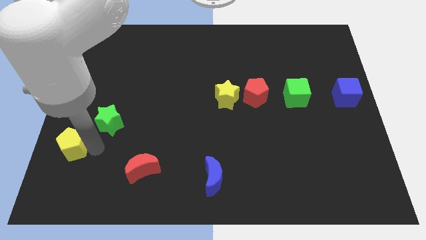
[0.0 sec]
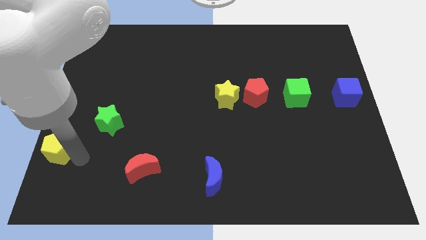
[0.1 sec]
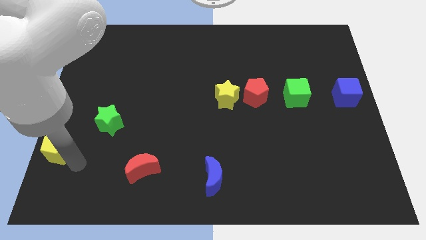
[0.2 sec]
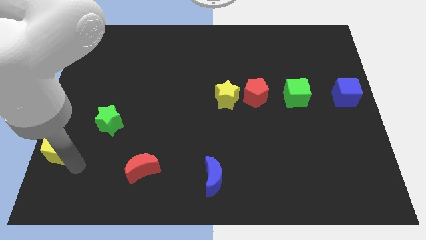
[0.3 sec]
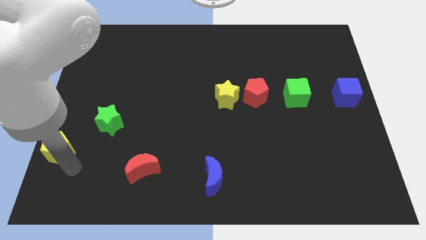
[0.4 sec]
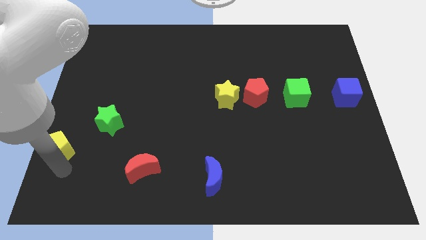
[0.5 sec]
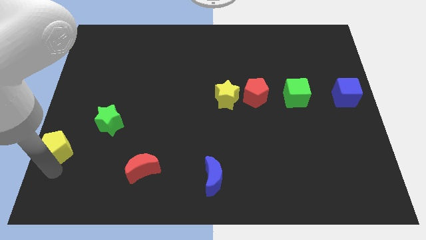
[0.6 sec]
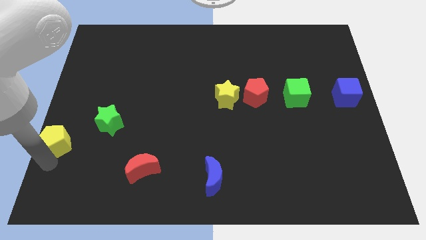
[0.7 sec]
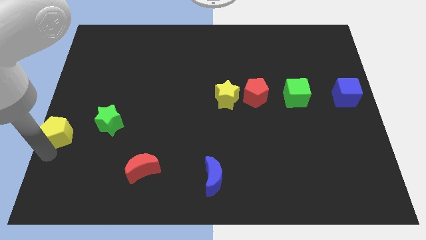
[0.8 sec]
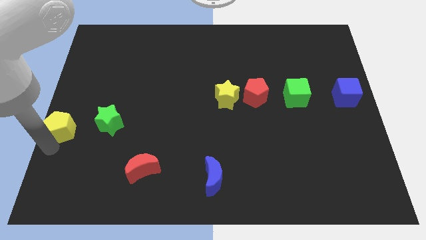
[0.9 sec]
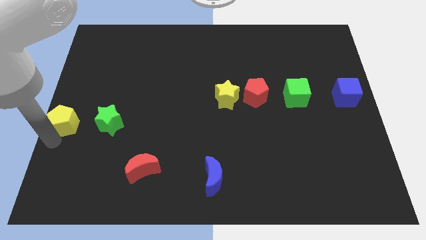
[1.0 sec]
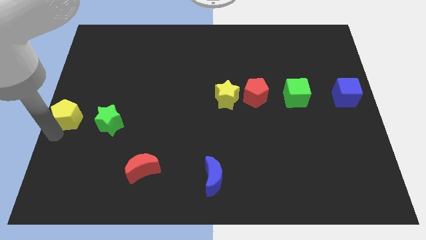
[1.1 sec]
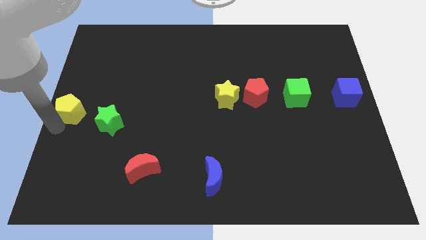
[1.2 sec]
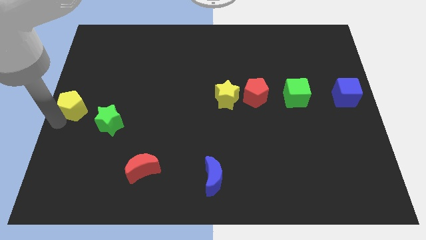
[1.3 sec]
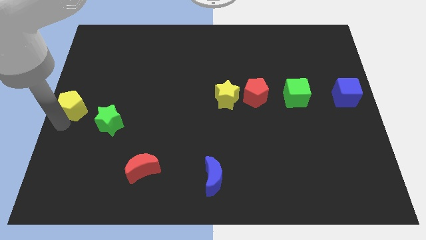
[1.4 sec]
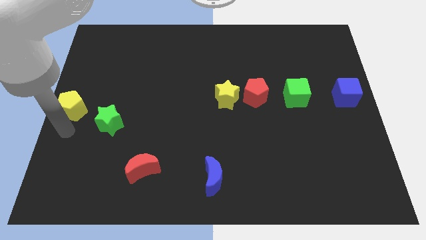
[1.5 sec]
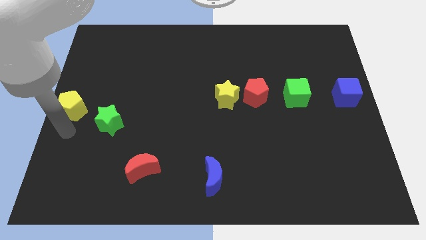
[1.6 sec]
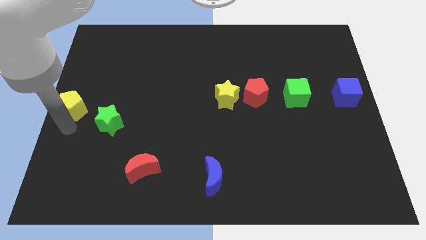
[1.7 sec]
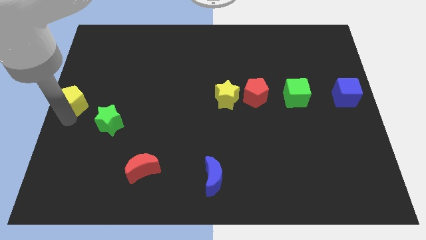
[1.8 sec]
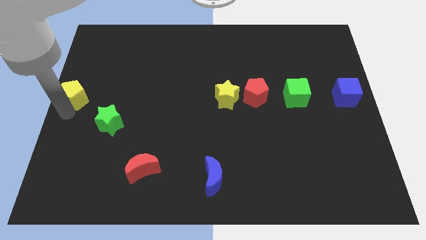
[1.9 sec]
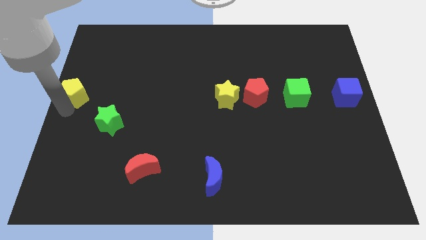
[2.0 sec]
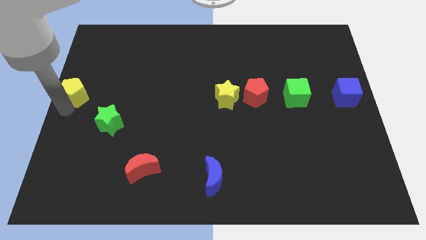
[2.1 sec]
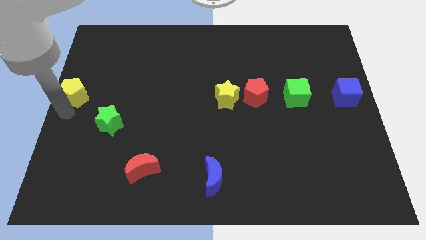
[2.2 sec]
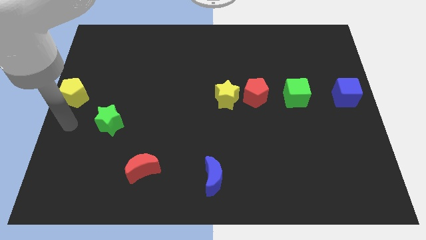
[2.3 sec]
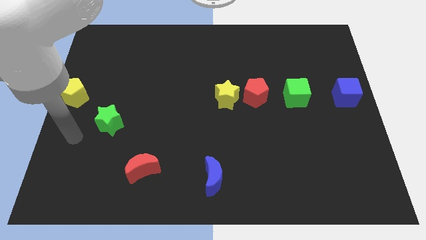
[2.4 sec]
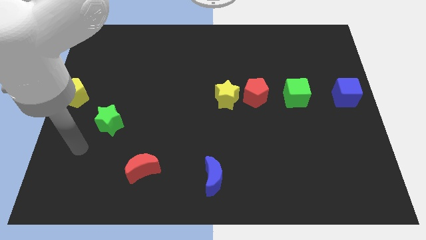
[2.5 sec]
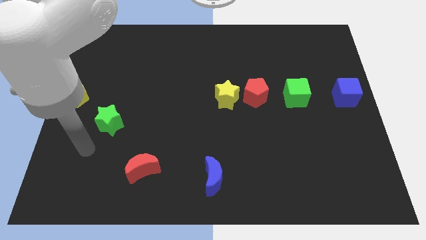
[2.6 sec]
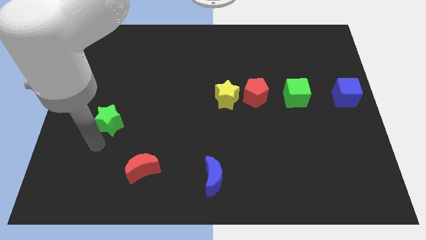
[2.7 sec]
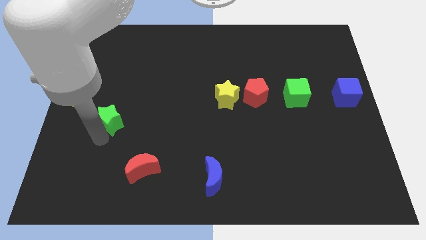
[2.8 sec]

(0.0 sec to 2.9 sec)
separate the yellow pentagon from the green star

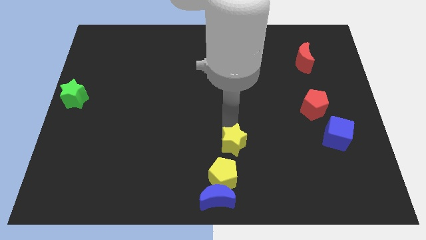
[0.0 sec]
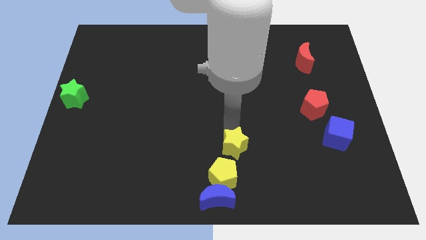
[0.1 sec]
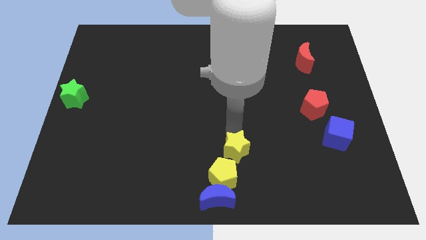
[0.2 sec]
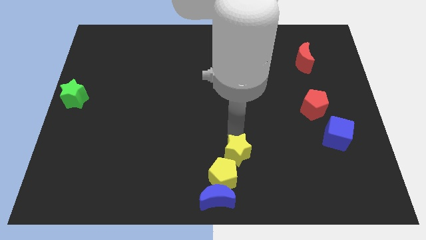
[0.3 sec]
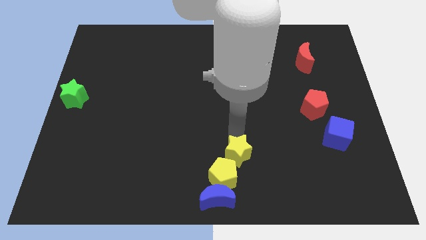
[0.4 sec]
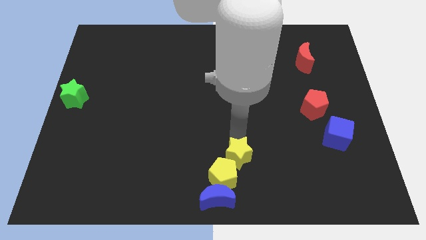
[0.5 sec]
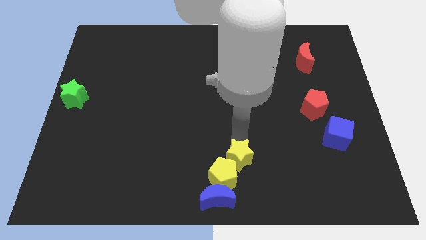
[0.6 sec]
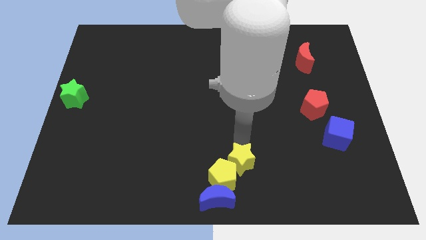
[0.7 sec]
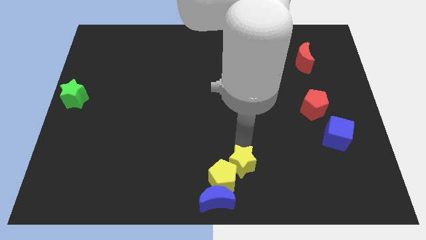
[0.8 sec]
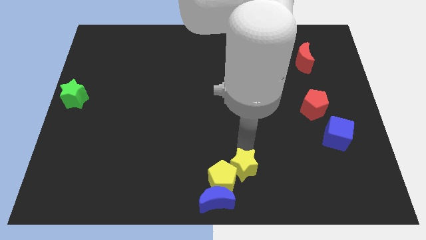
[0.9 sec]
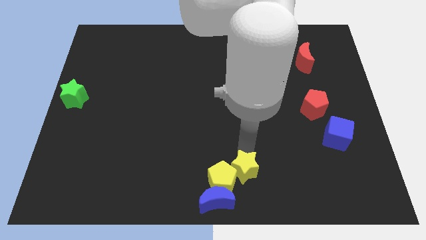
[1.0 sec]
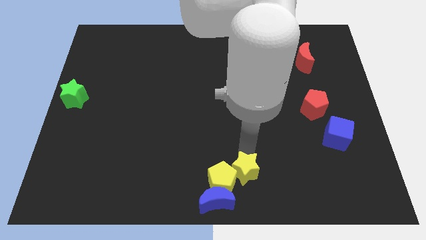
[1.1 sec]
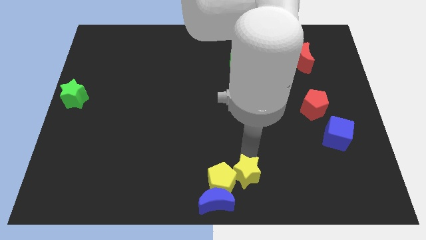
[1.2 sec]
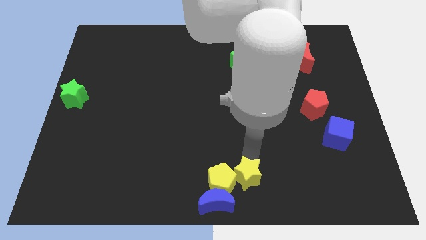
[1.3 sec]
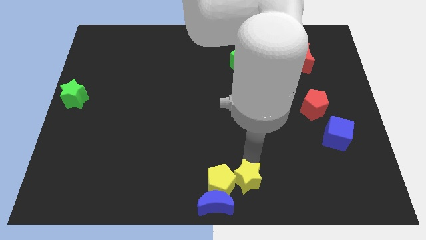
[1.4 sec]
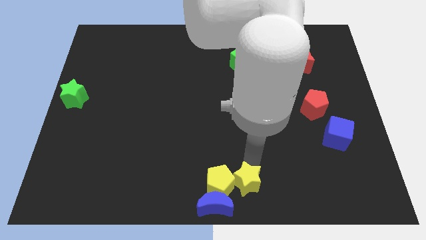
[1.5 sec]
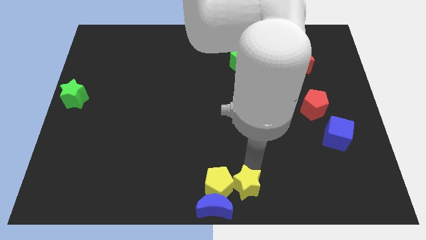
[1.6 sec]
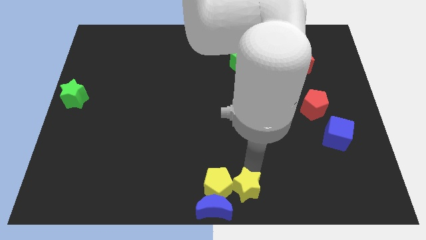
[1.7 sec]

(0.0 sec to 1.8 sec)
push a group of blocks downward

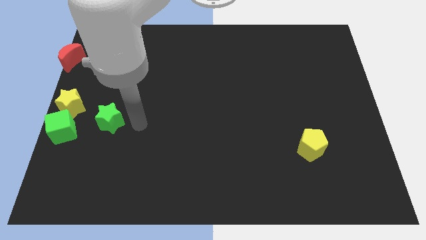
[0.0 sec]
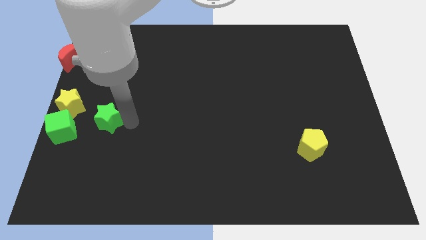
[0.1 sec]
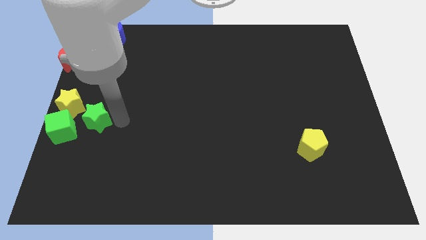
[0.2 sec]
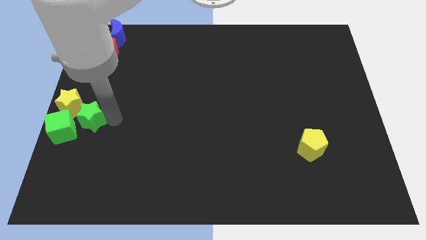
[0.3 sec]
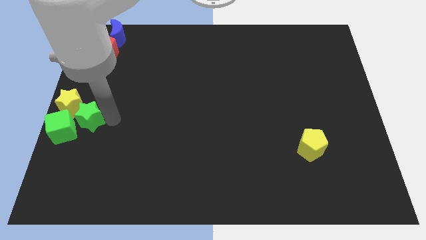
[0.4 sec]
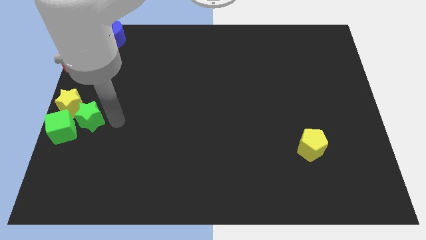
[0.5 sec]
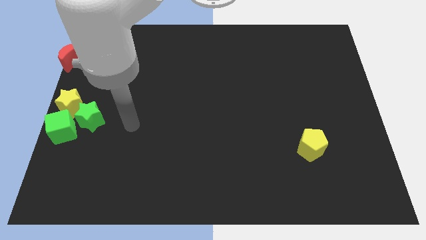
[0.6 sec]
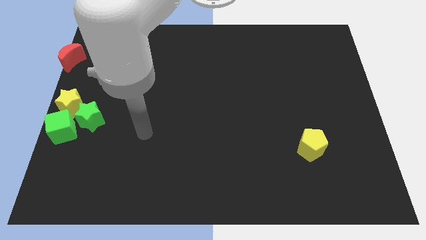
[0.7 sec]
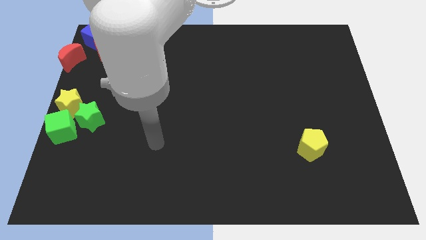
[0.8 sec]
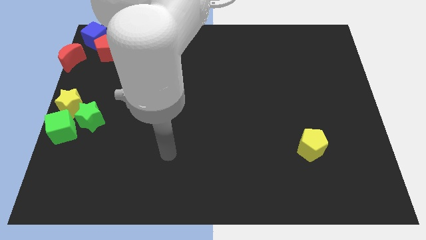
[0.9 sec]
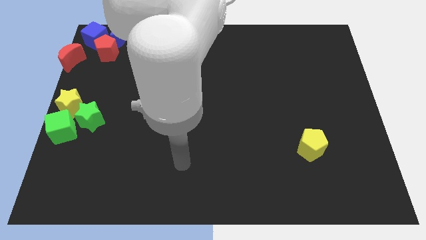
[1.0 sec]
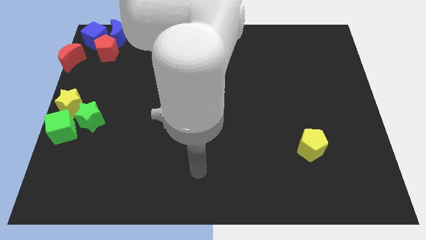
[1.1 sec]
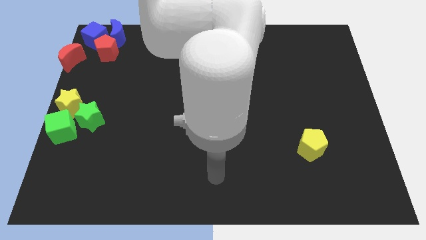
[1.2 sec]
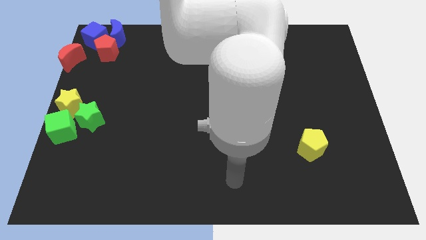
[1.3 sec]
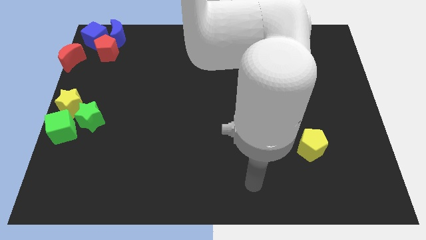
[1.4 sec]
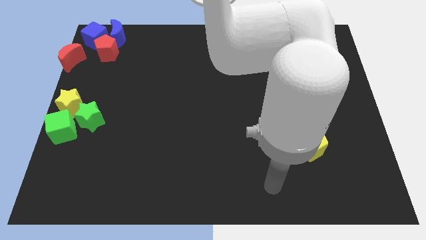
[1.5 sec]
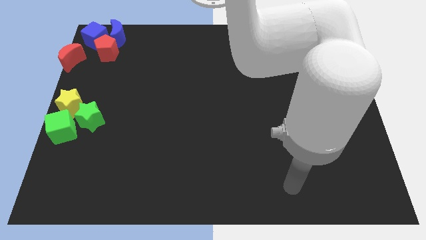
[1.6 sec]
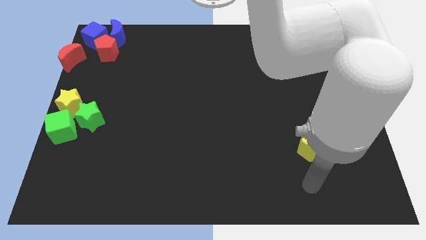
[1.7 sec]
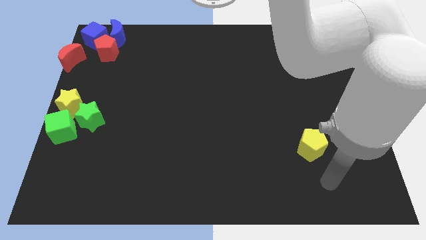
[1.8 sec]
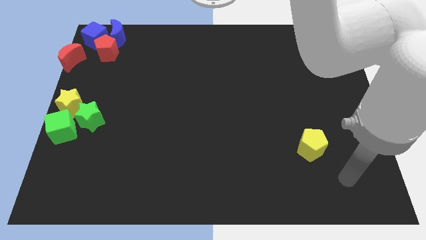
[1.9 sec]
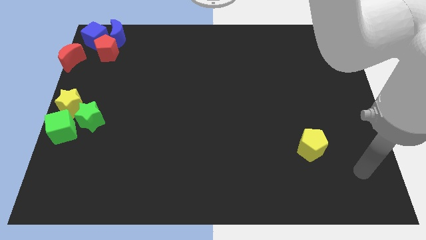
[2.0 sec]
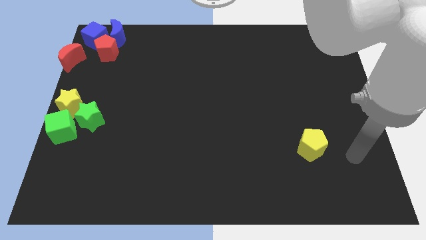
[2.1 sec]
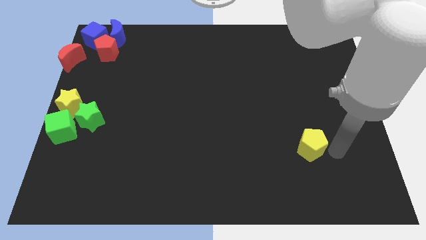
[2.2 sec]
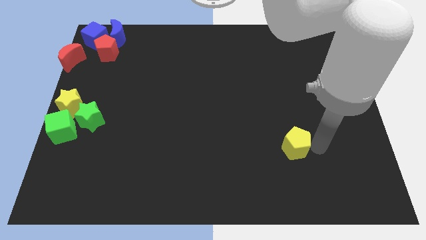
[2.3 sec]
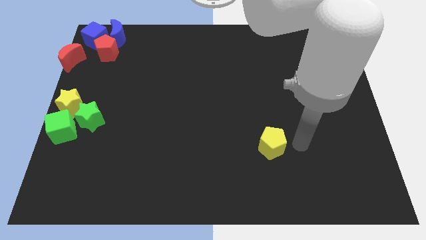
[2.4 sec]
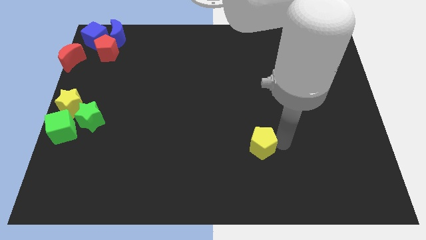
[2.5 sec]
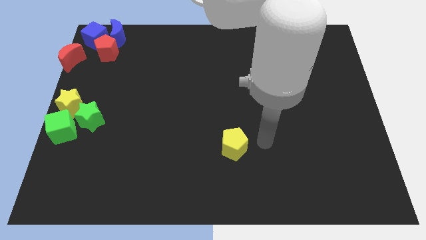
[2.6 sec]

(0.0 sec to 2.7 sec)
push yellow pentagon slightly towards left

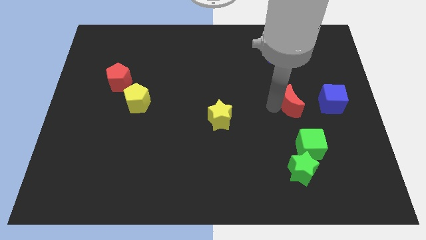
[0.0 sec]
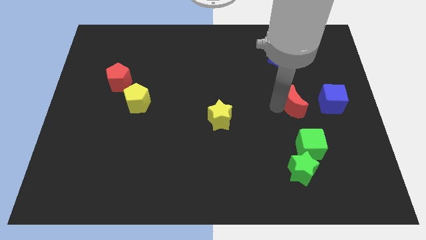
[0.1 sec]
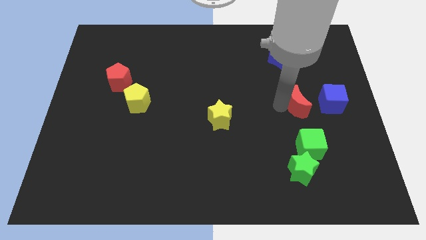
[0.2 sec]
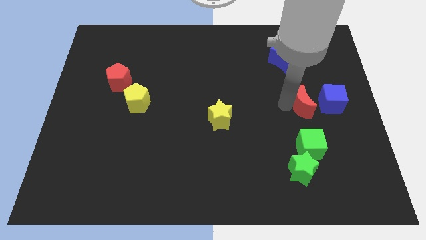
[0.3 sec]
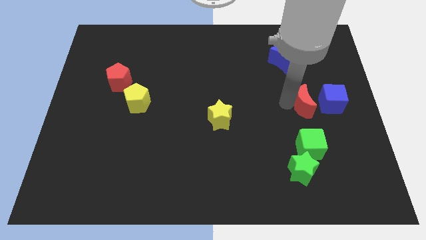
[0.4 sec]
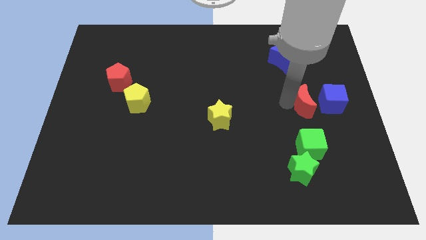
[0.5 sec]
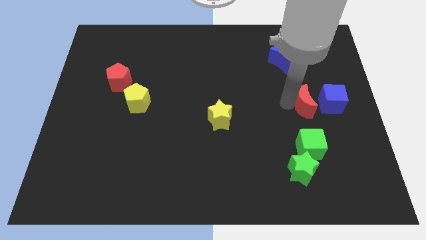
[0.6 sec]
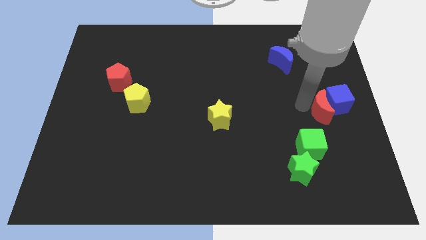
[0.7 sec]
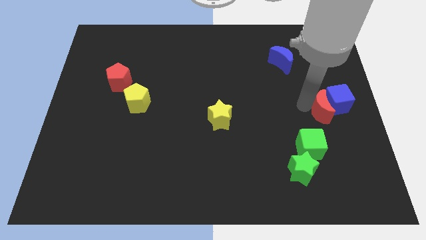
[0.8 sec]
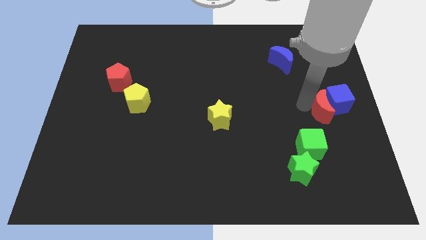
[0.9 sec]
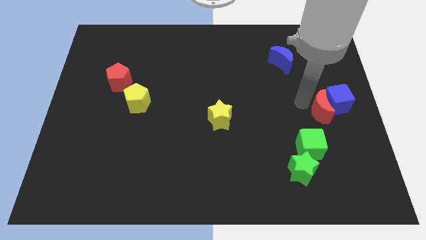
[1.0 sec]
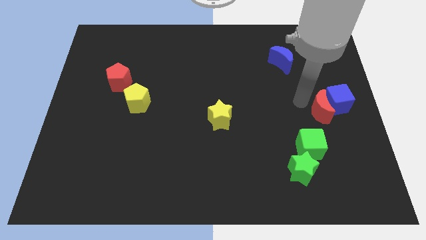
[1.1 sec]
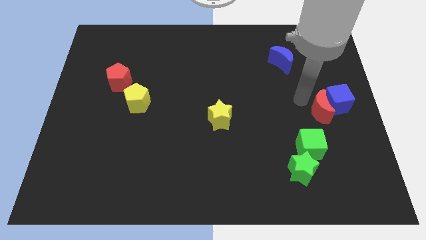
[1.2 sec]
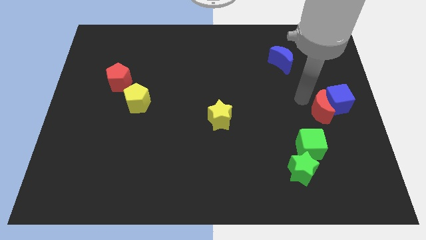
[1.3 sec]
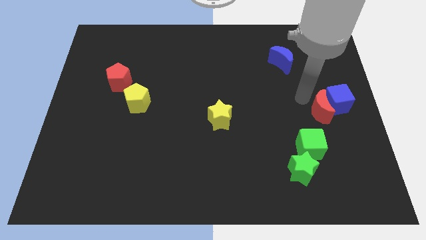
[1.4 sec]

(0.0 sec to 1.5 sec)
push red crescent into the blue cube

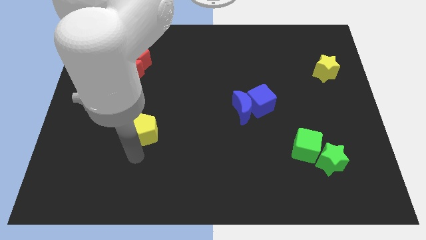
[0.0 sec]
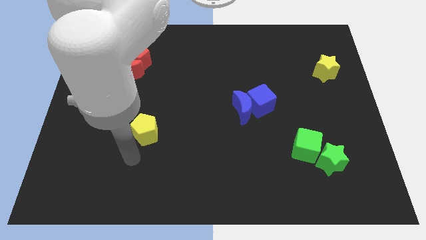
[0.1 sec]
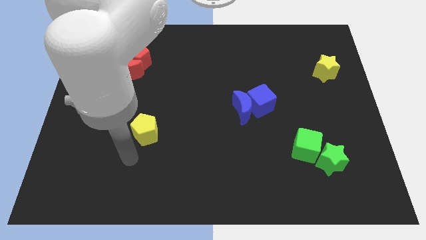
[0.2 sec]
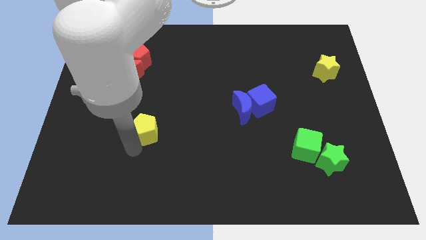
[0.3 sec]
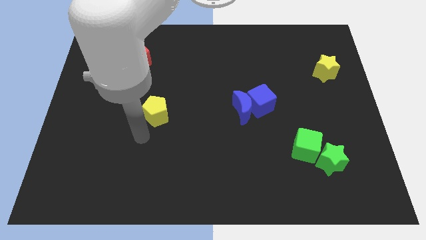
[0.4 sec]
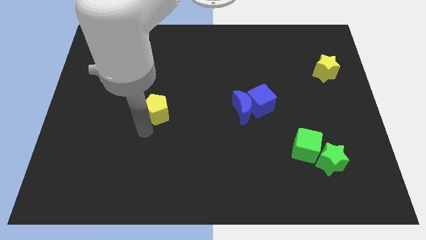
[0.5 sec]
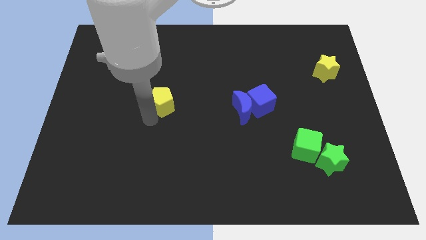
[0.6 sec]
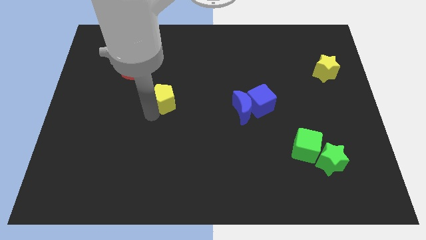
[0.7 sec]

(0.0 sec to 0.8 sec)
push the yellow pentagon slightly up
